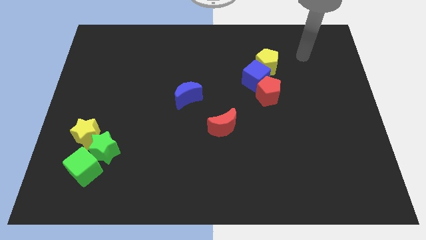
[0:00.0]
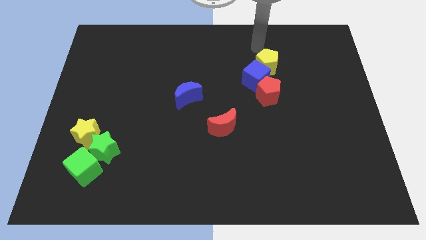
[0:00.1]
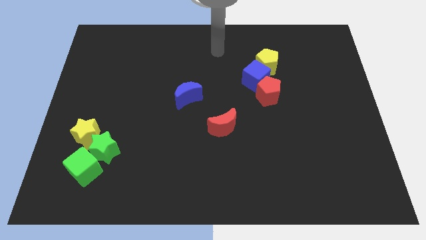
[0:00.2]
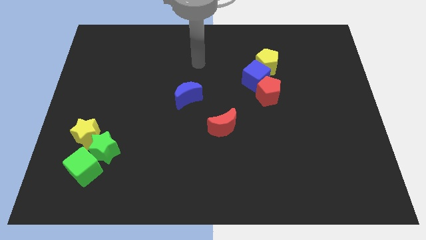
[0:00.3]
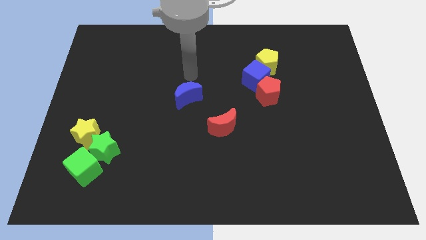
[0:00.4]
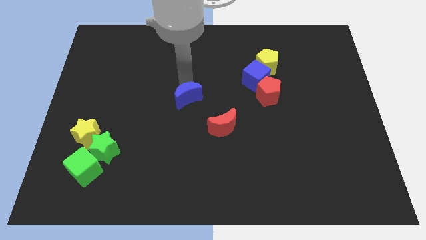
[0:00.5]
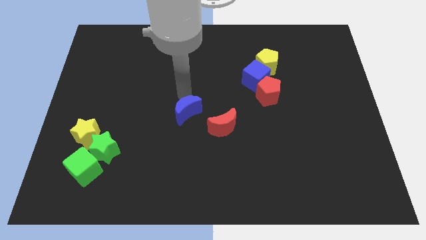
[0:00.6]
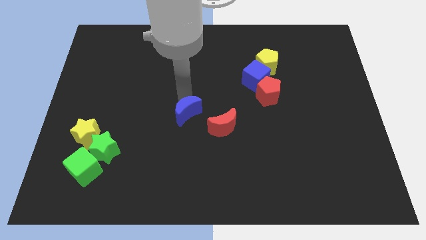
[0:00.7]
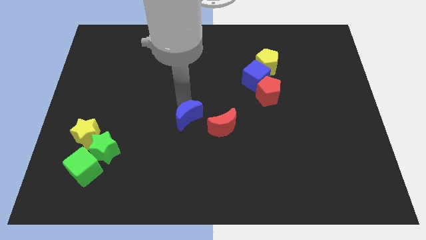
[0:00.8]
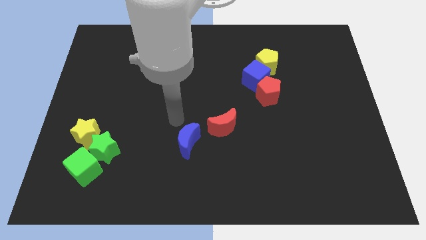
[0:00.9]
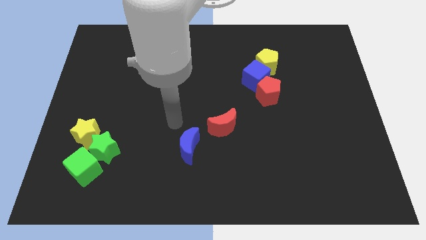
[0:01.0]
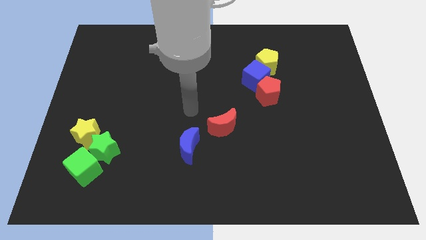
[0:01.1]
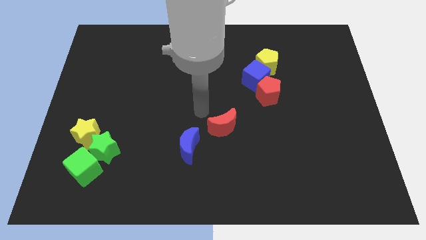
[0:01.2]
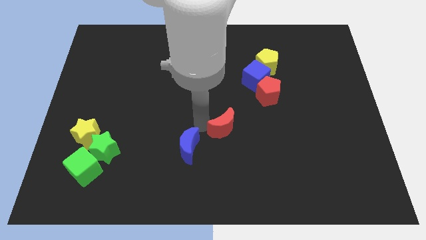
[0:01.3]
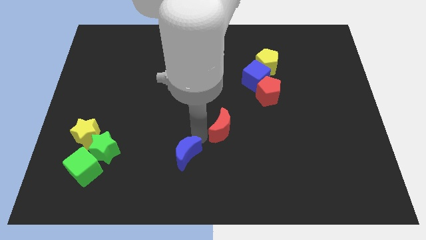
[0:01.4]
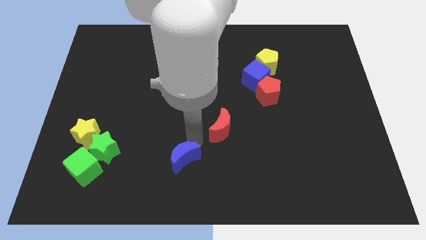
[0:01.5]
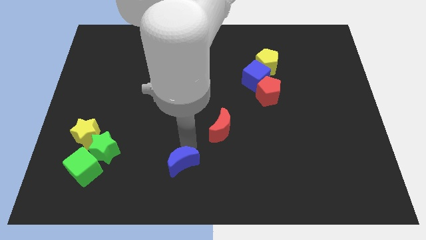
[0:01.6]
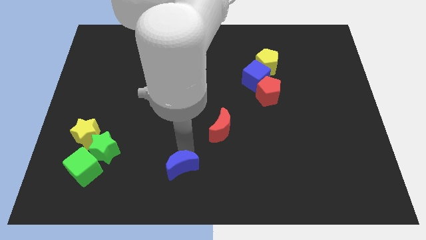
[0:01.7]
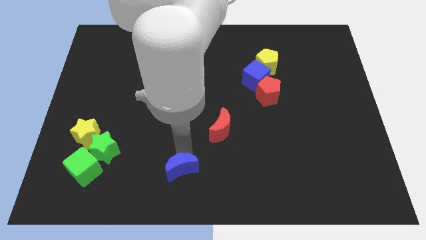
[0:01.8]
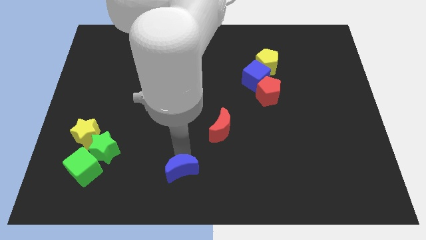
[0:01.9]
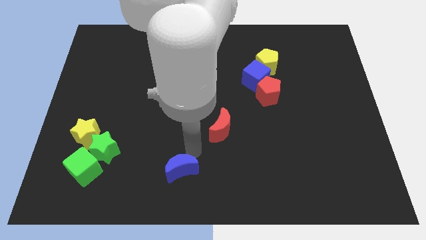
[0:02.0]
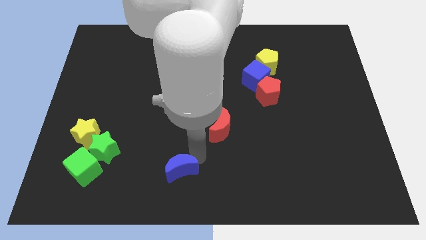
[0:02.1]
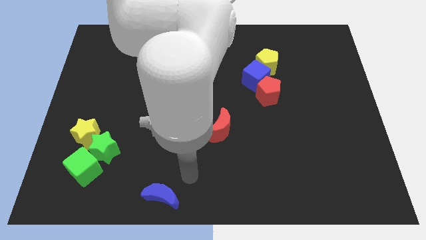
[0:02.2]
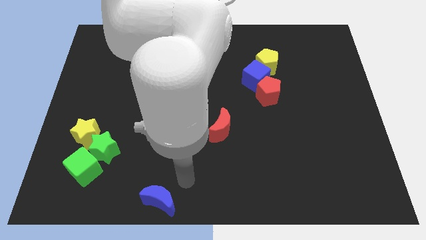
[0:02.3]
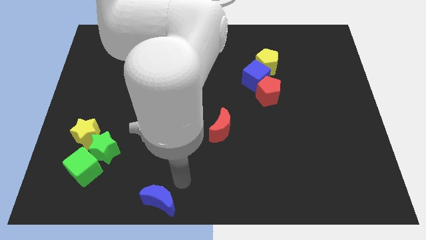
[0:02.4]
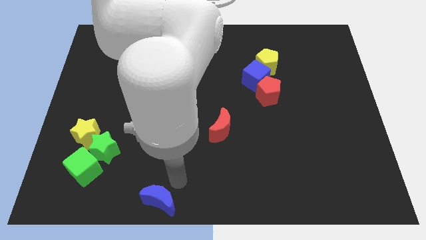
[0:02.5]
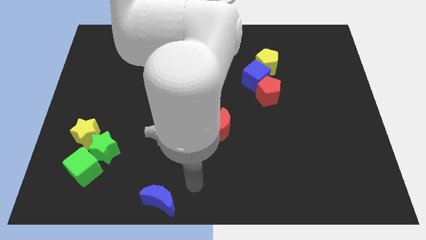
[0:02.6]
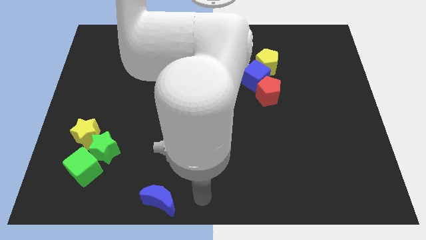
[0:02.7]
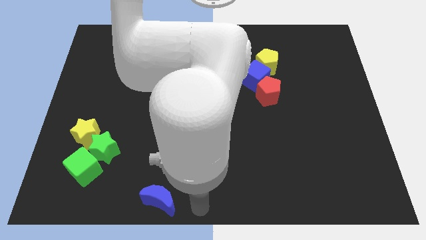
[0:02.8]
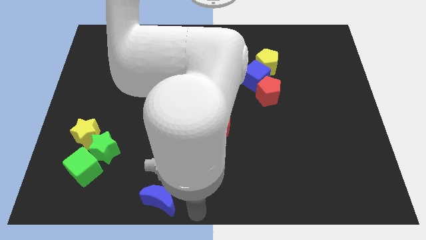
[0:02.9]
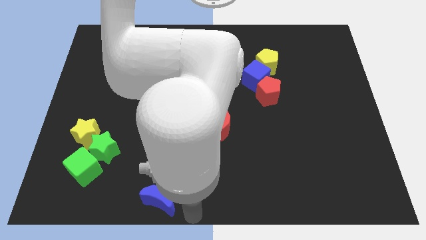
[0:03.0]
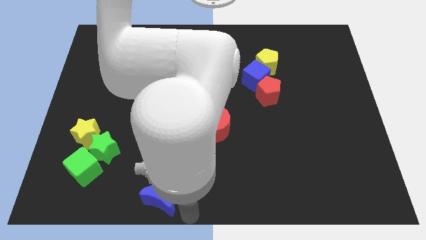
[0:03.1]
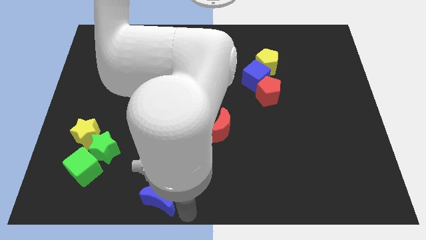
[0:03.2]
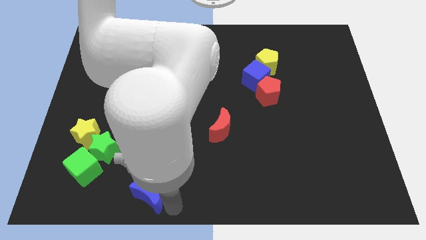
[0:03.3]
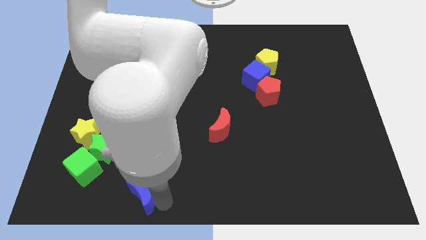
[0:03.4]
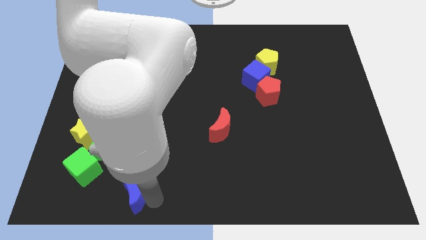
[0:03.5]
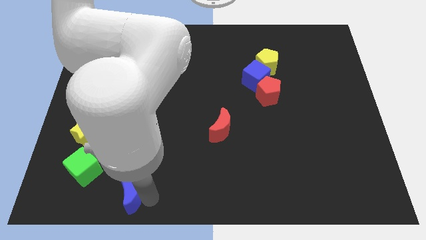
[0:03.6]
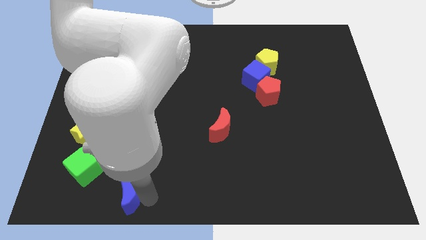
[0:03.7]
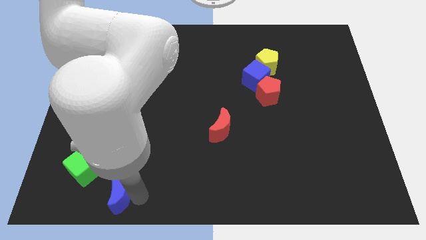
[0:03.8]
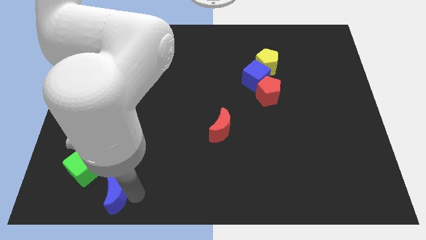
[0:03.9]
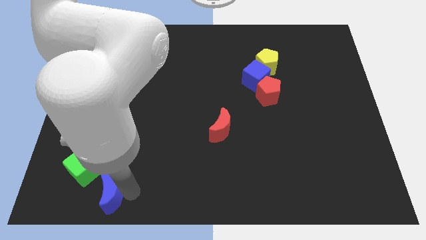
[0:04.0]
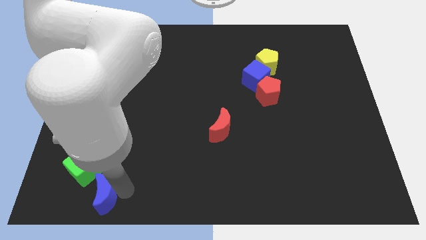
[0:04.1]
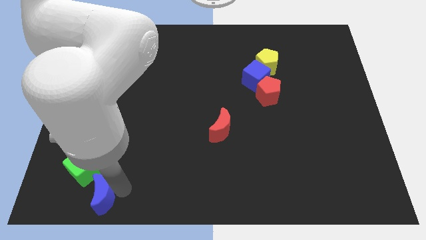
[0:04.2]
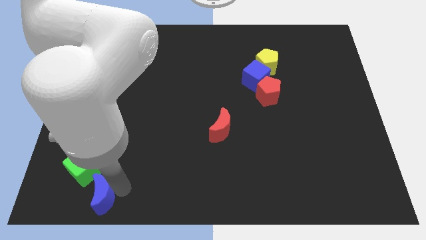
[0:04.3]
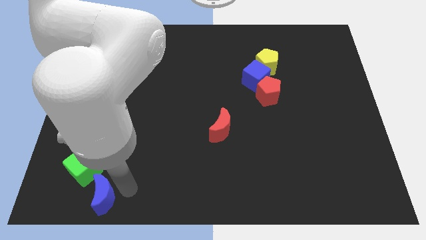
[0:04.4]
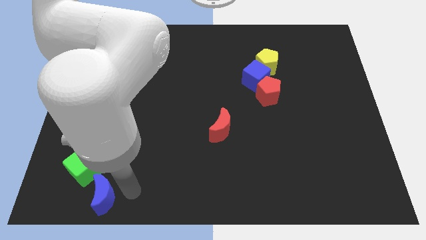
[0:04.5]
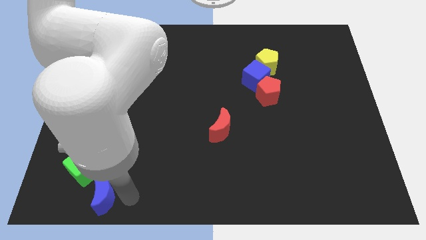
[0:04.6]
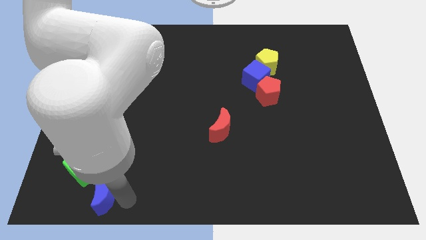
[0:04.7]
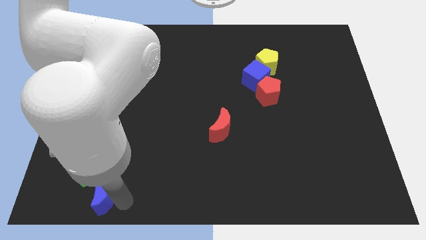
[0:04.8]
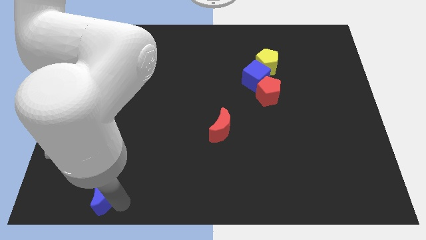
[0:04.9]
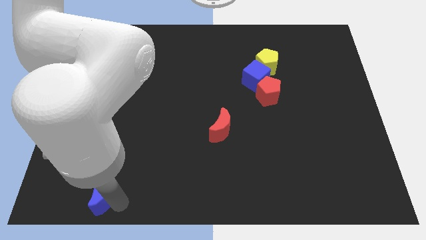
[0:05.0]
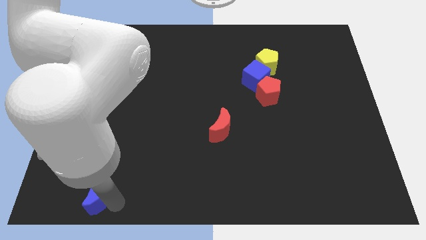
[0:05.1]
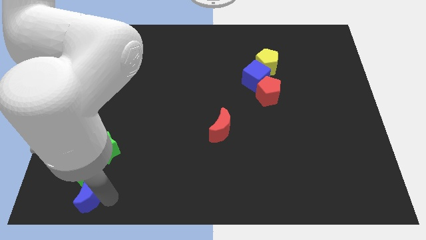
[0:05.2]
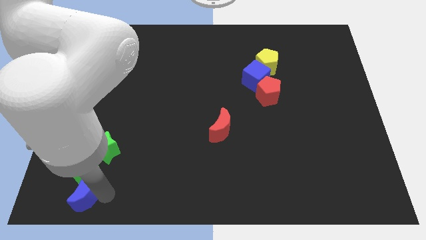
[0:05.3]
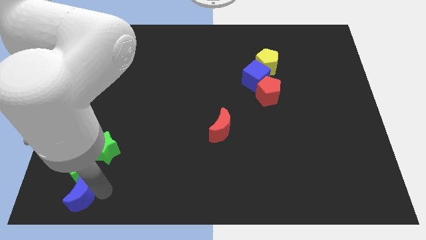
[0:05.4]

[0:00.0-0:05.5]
move the blue moon next to the green cube

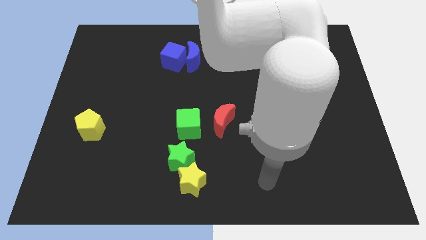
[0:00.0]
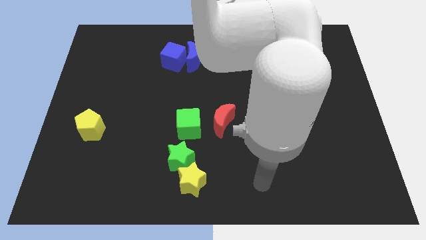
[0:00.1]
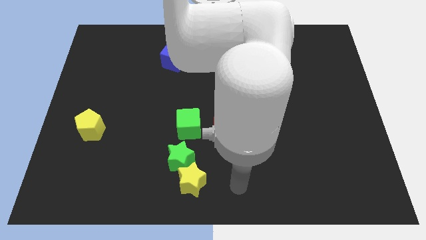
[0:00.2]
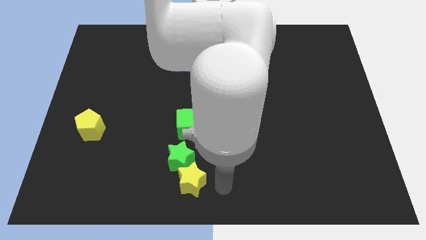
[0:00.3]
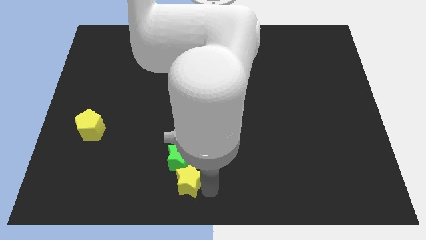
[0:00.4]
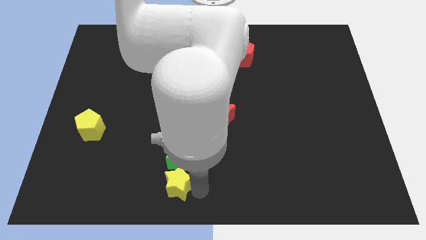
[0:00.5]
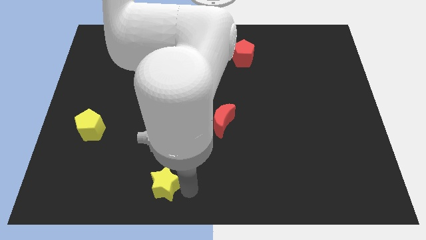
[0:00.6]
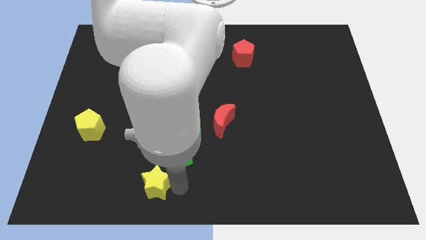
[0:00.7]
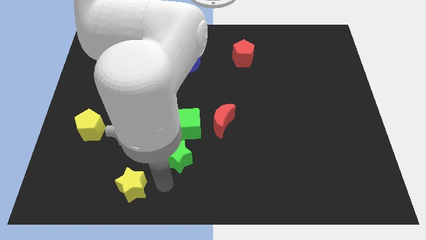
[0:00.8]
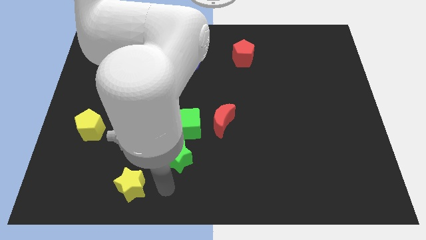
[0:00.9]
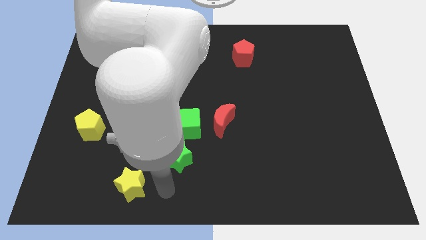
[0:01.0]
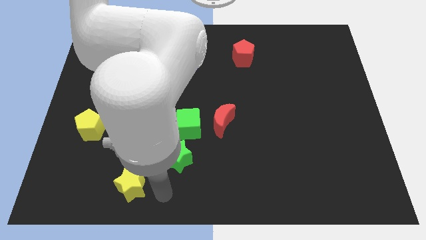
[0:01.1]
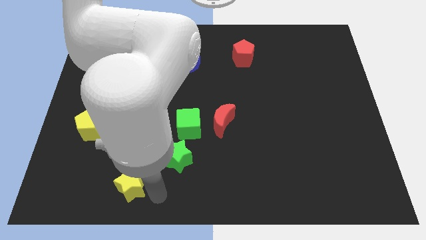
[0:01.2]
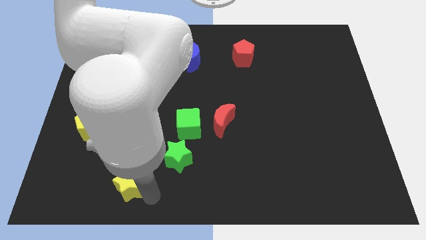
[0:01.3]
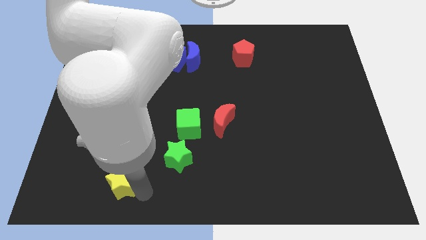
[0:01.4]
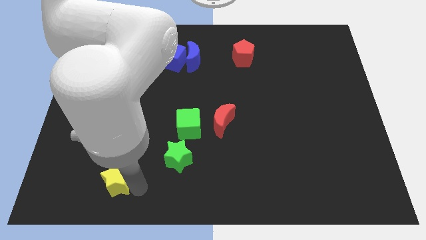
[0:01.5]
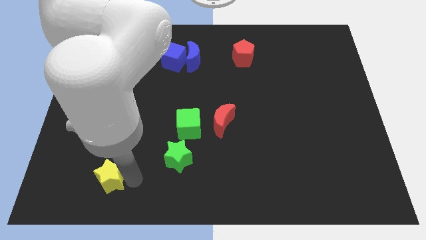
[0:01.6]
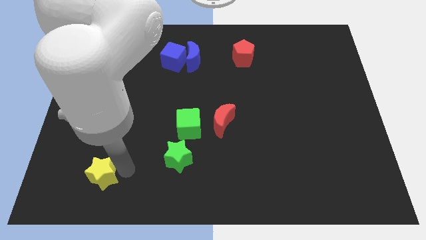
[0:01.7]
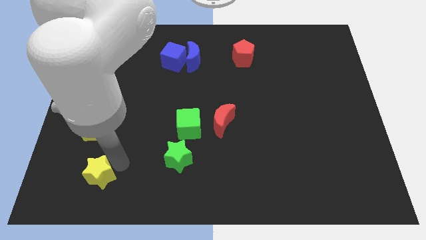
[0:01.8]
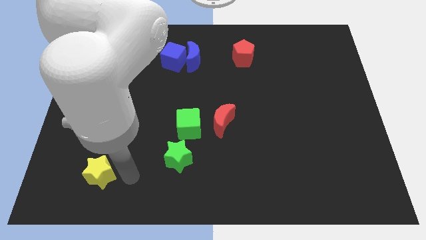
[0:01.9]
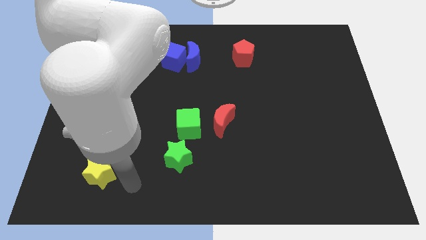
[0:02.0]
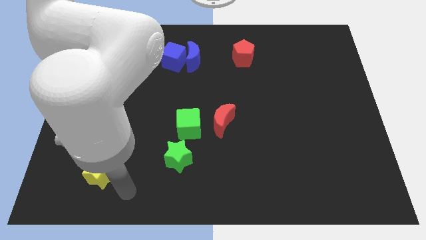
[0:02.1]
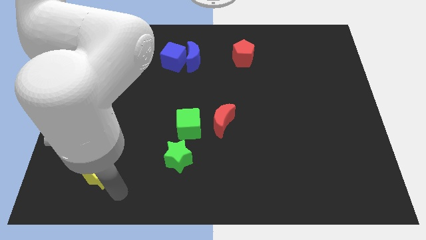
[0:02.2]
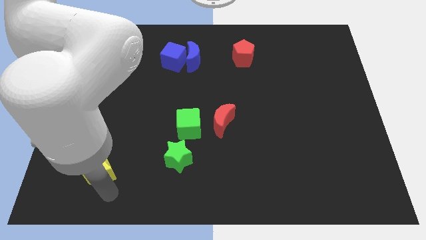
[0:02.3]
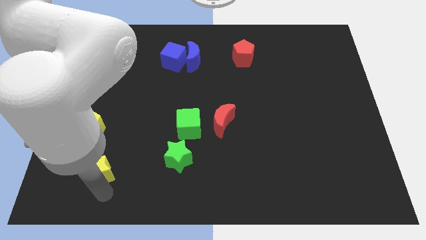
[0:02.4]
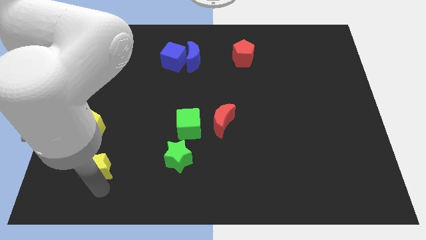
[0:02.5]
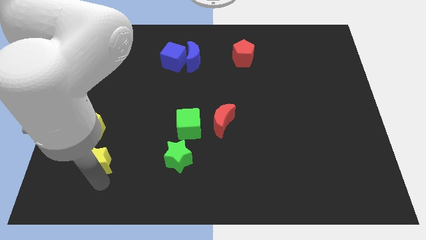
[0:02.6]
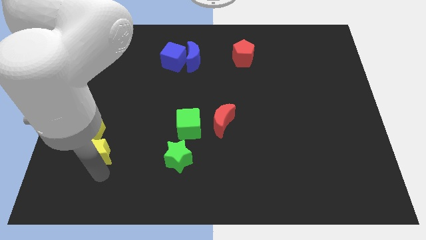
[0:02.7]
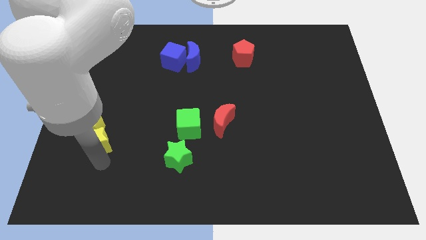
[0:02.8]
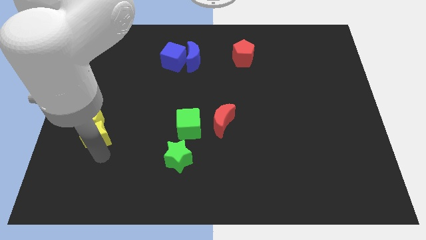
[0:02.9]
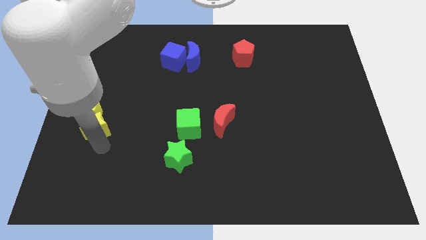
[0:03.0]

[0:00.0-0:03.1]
push the yellow star to the yellow pentagon
